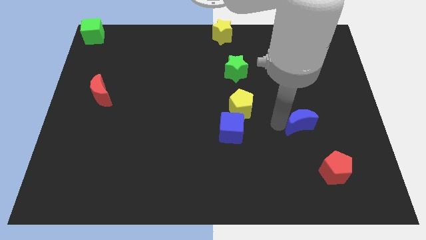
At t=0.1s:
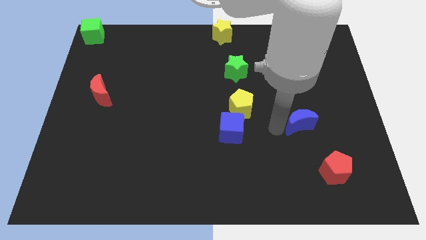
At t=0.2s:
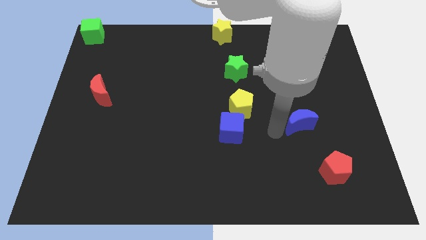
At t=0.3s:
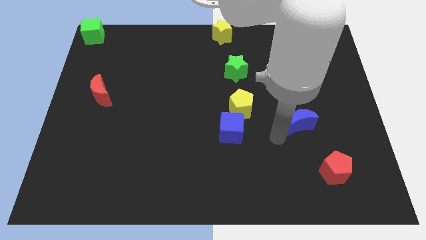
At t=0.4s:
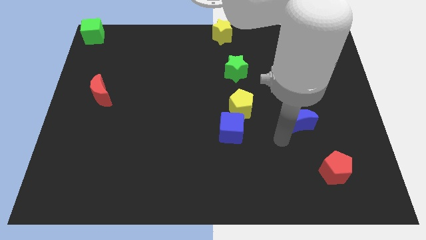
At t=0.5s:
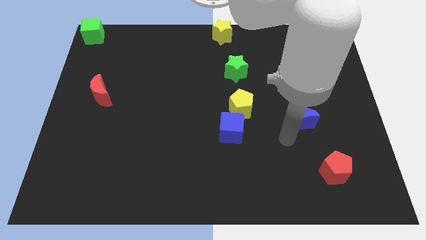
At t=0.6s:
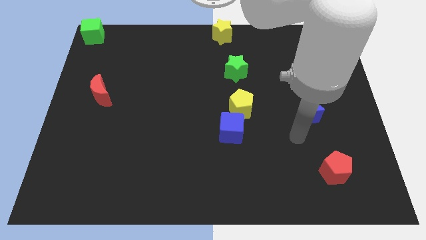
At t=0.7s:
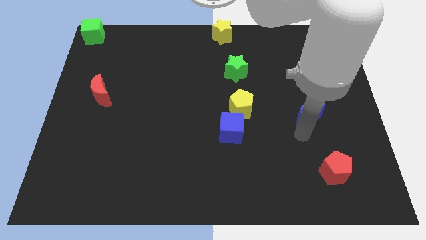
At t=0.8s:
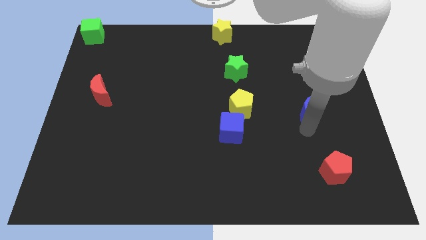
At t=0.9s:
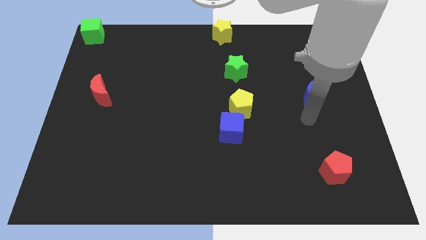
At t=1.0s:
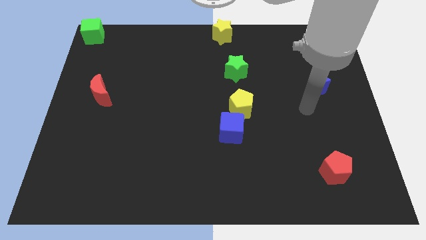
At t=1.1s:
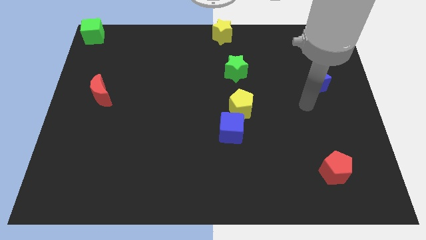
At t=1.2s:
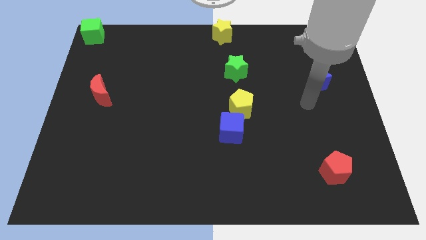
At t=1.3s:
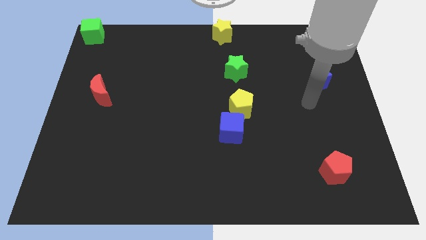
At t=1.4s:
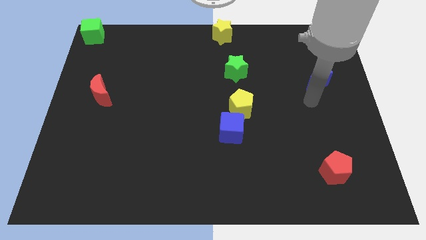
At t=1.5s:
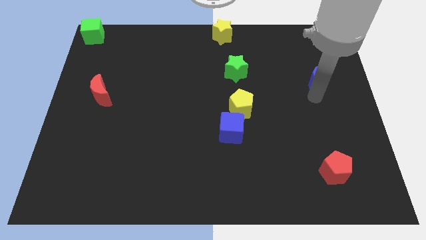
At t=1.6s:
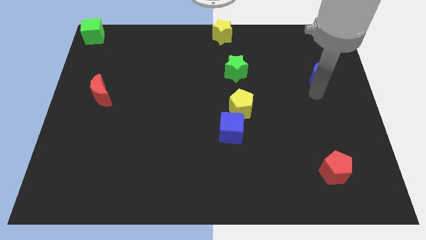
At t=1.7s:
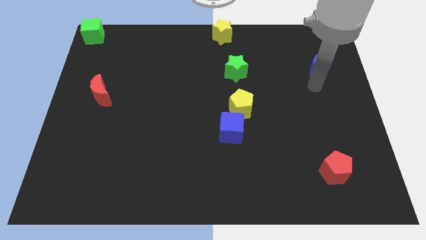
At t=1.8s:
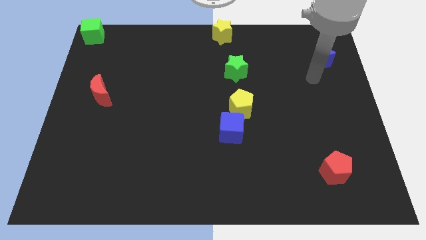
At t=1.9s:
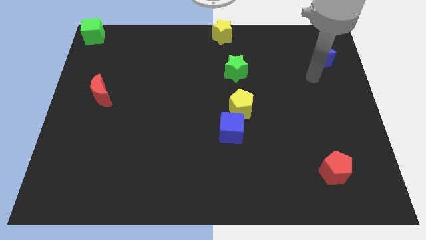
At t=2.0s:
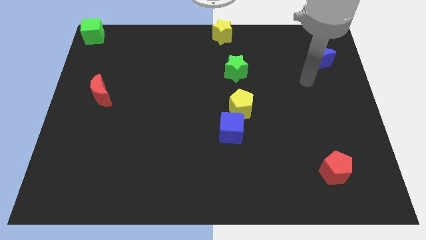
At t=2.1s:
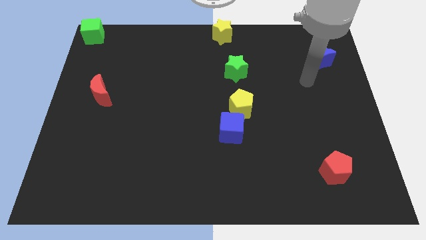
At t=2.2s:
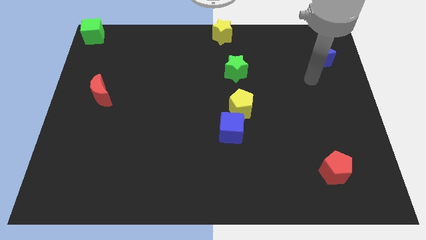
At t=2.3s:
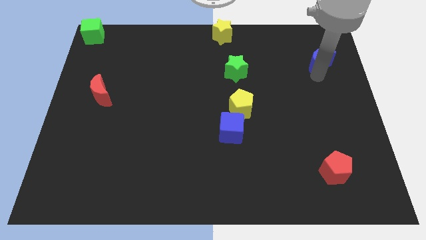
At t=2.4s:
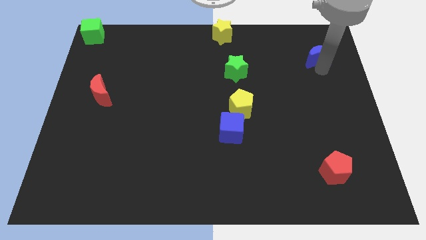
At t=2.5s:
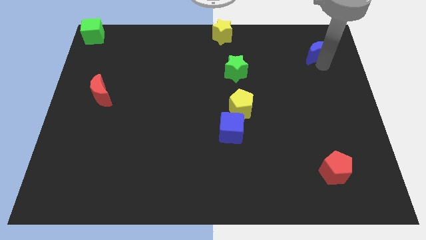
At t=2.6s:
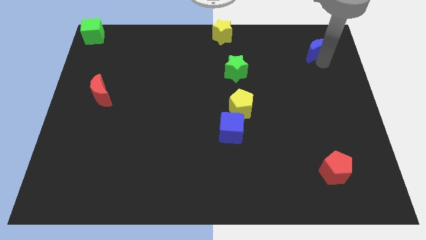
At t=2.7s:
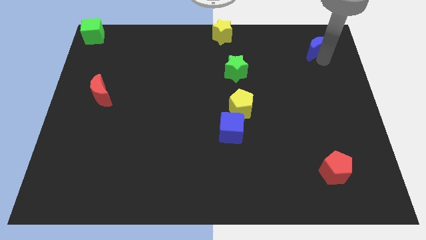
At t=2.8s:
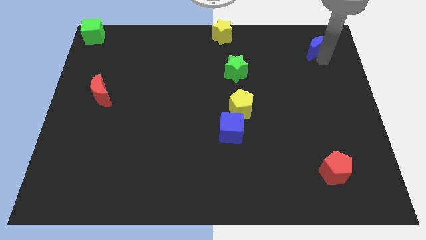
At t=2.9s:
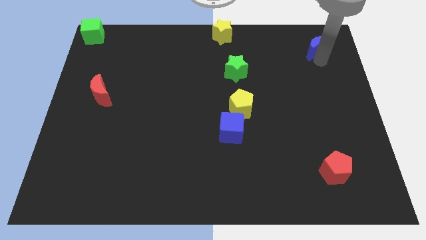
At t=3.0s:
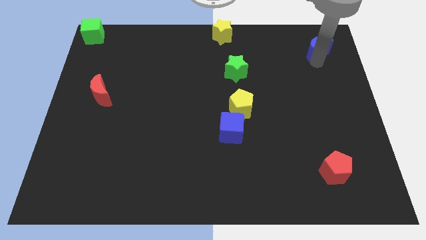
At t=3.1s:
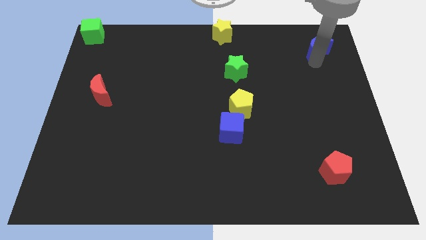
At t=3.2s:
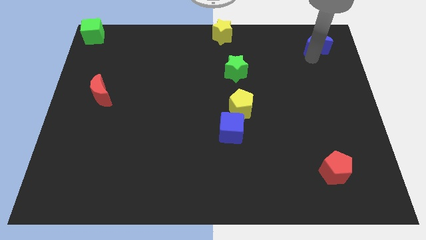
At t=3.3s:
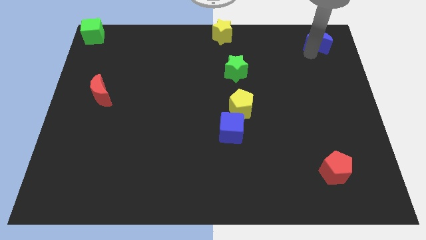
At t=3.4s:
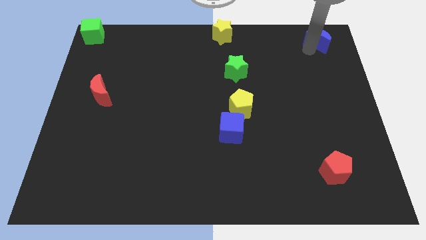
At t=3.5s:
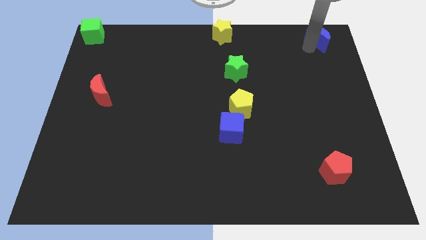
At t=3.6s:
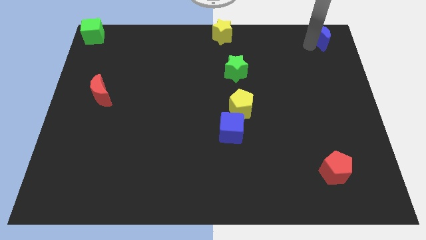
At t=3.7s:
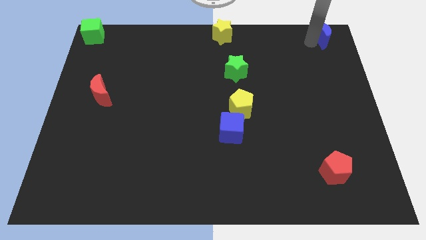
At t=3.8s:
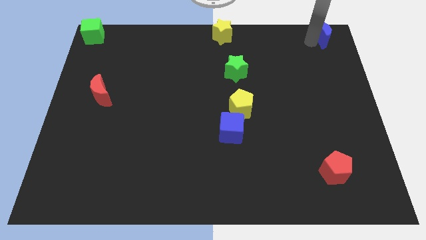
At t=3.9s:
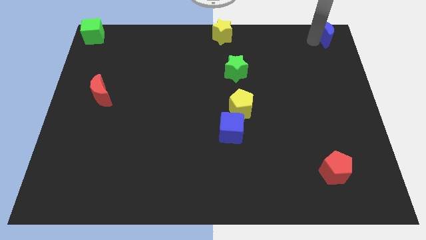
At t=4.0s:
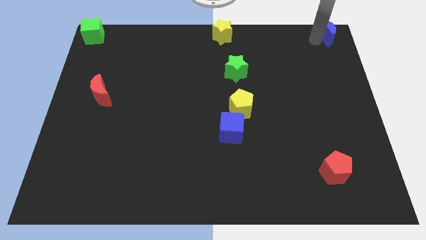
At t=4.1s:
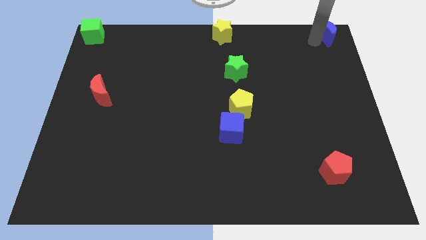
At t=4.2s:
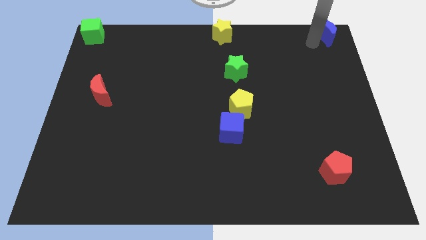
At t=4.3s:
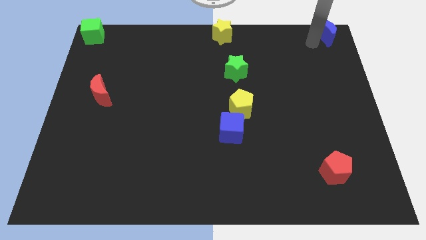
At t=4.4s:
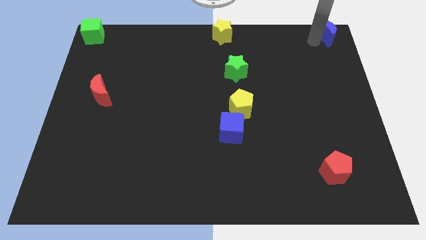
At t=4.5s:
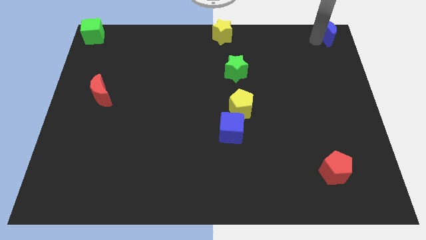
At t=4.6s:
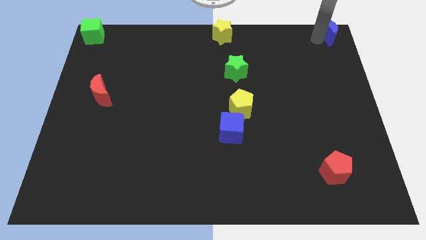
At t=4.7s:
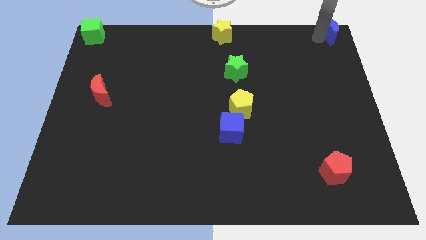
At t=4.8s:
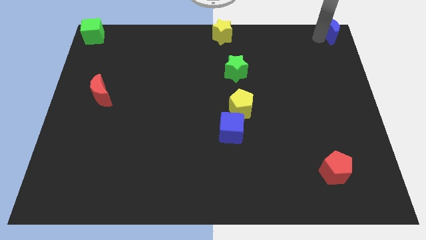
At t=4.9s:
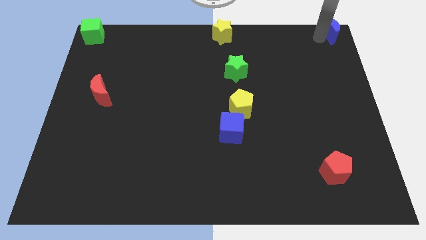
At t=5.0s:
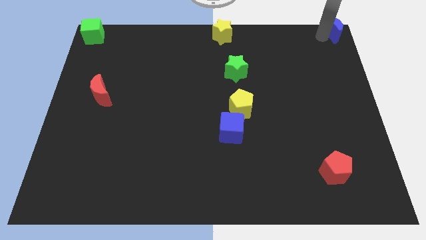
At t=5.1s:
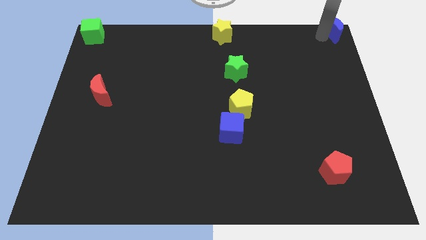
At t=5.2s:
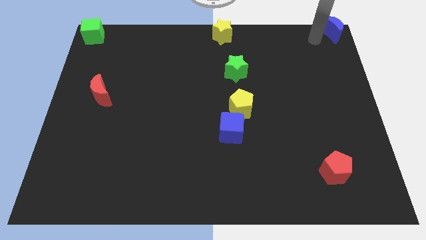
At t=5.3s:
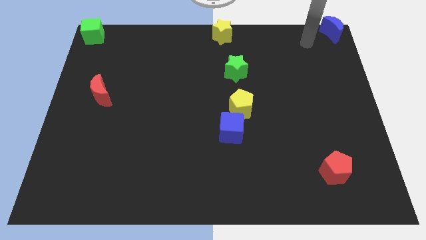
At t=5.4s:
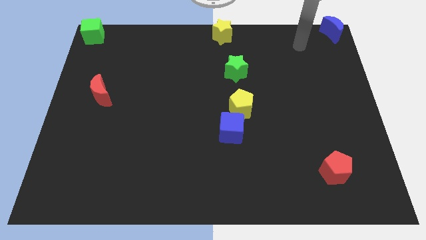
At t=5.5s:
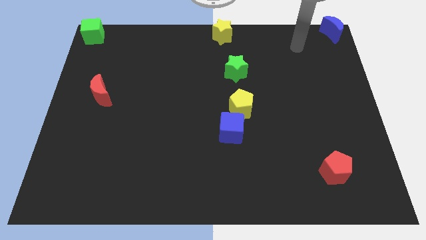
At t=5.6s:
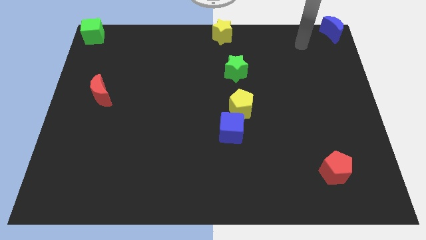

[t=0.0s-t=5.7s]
place the blue crescent at the top right corner of the board

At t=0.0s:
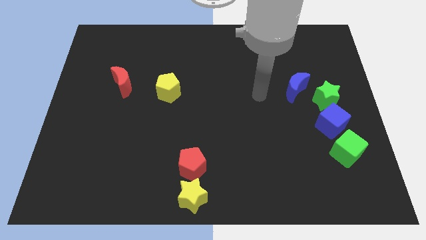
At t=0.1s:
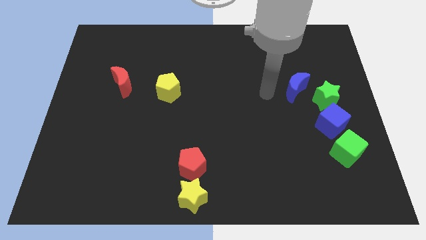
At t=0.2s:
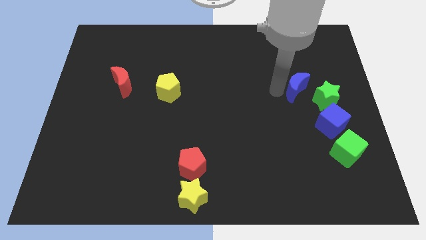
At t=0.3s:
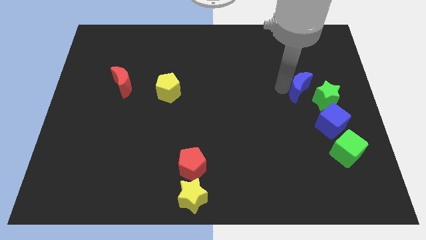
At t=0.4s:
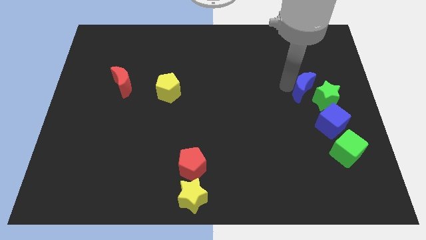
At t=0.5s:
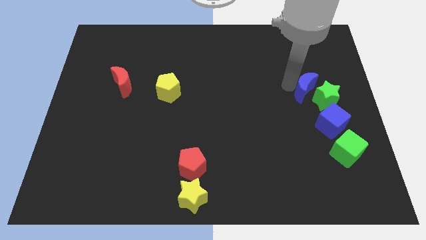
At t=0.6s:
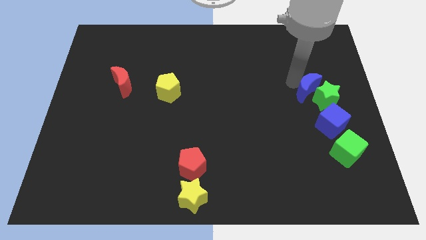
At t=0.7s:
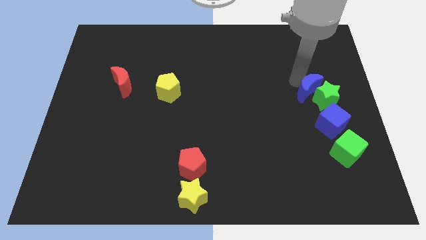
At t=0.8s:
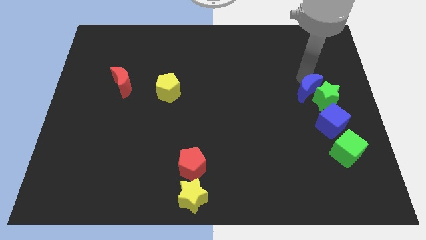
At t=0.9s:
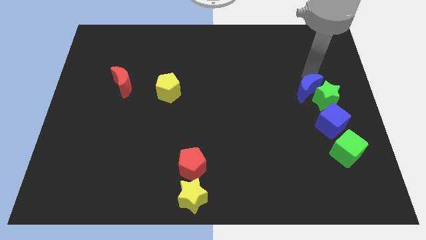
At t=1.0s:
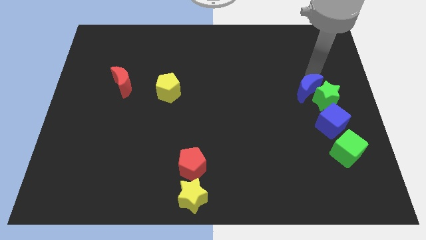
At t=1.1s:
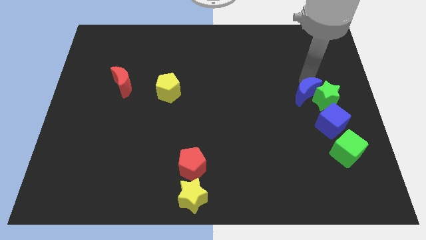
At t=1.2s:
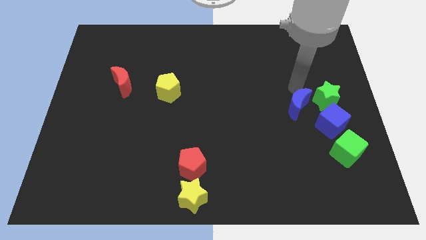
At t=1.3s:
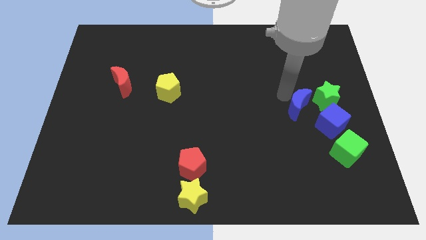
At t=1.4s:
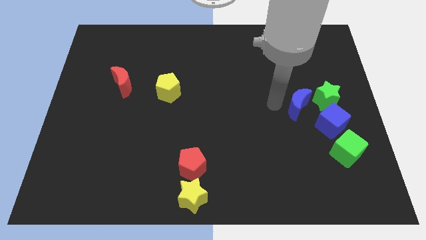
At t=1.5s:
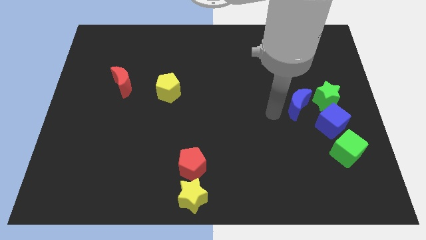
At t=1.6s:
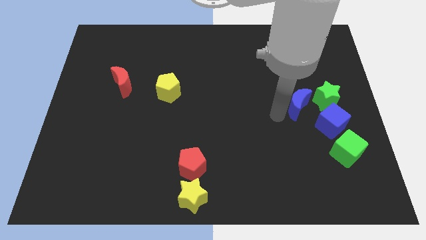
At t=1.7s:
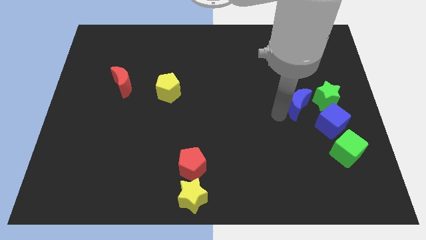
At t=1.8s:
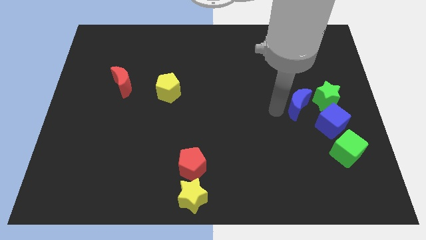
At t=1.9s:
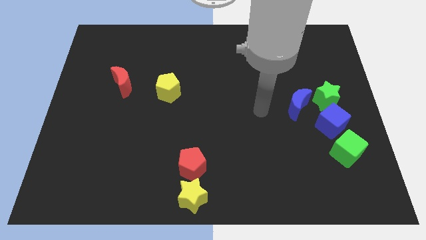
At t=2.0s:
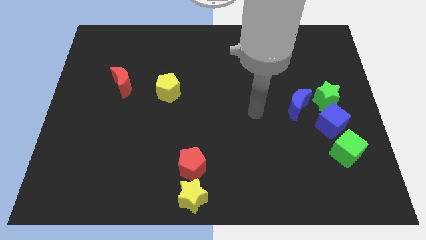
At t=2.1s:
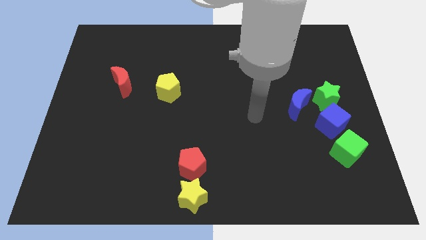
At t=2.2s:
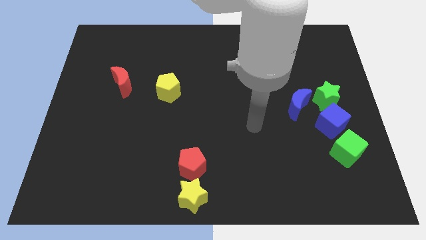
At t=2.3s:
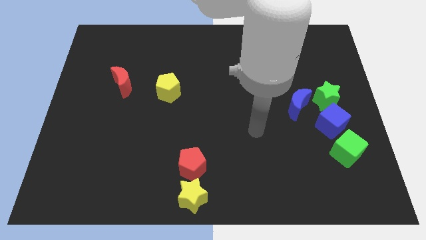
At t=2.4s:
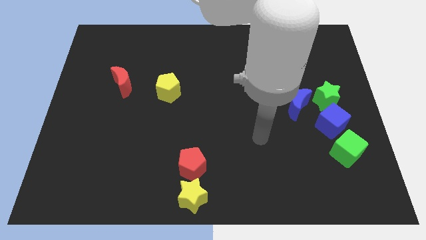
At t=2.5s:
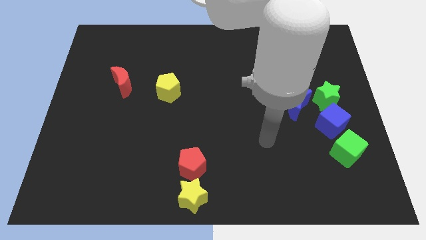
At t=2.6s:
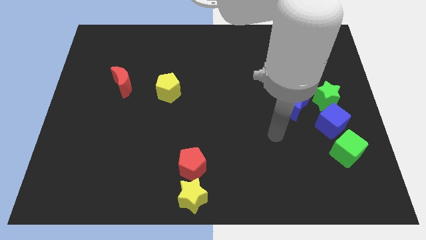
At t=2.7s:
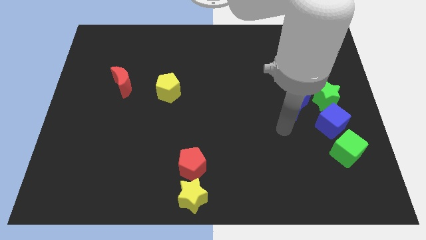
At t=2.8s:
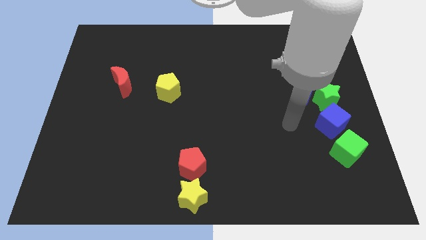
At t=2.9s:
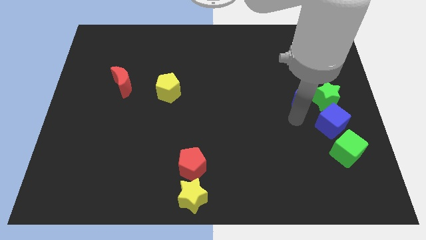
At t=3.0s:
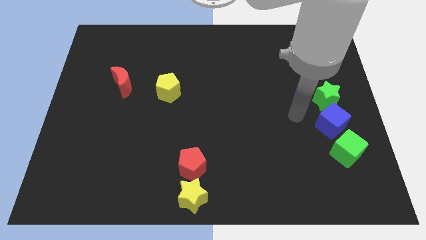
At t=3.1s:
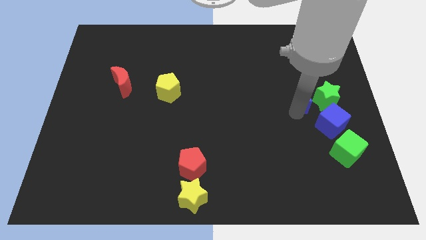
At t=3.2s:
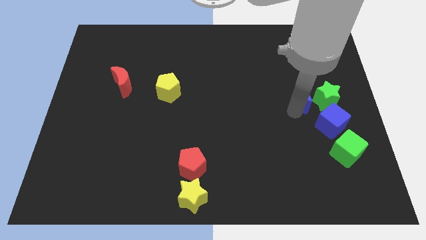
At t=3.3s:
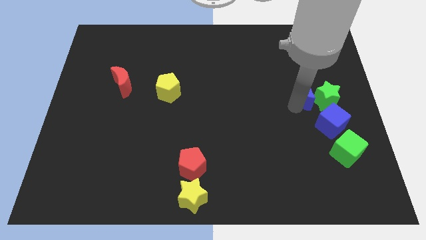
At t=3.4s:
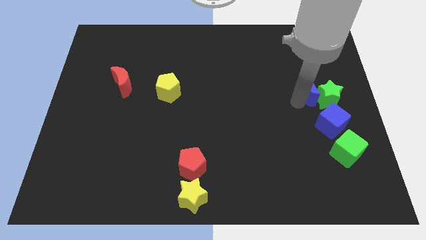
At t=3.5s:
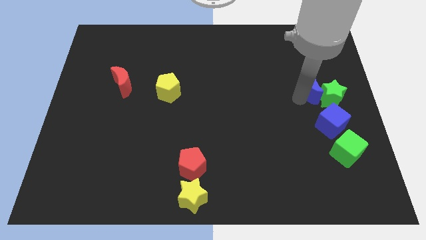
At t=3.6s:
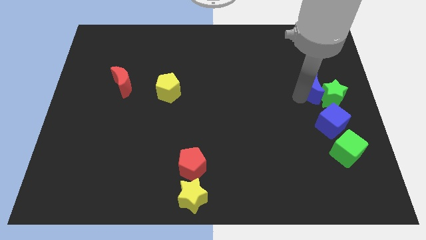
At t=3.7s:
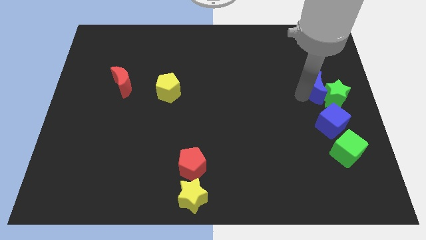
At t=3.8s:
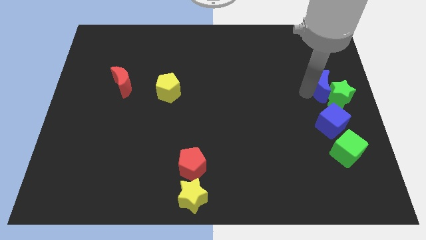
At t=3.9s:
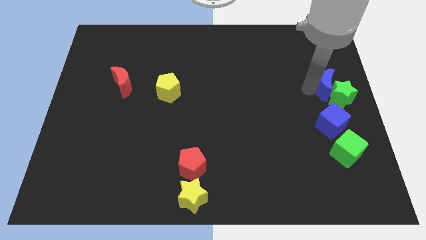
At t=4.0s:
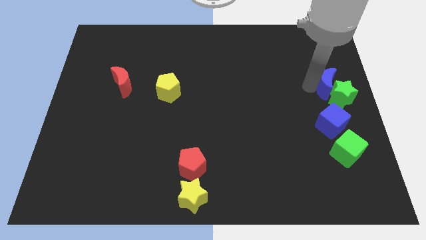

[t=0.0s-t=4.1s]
push the blue crescent into green star
